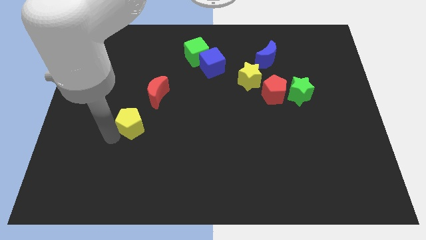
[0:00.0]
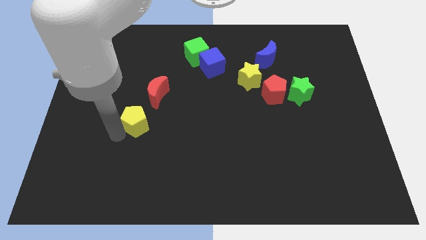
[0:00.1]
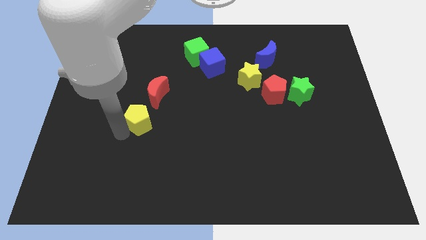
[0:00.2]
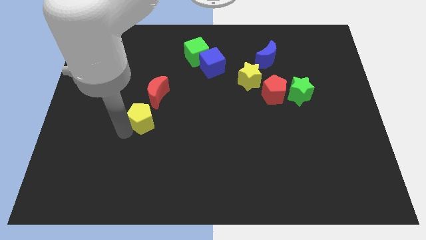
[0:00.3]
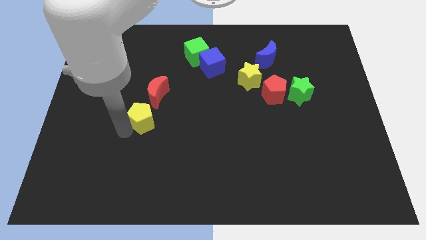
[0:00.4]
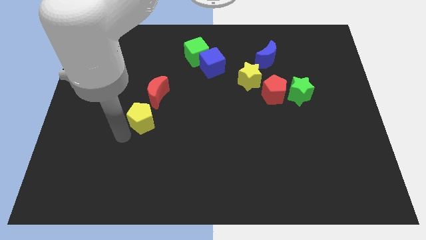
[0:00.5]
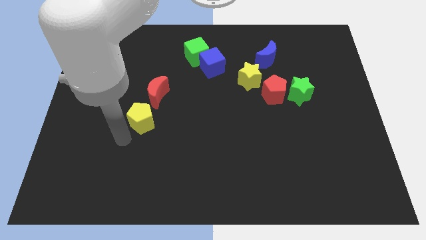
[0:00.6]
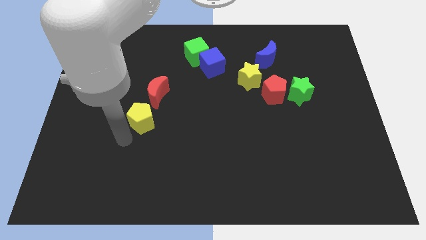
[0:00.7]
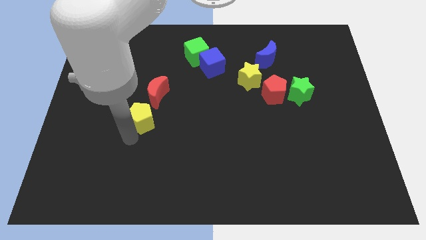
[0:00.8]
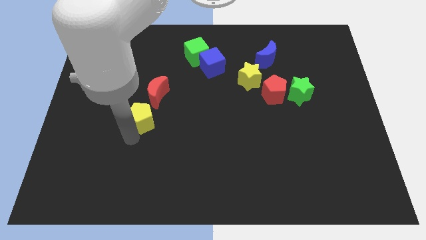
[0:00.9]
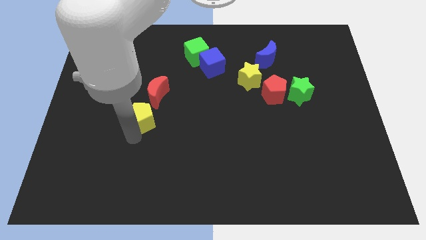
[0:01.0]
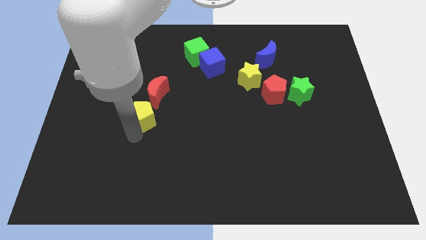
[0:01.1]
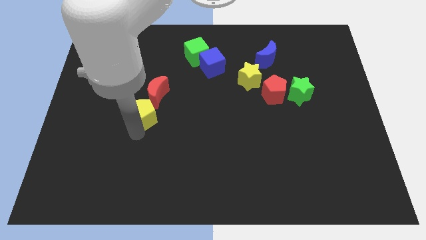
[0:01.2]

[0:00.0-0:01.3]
push the yellow pentagon towards the red crescent

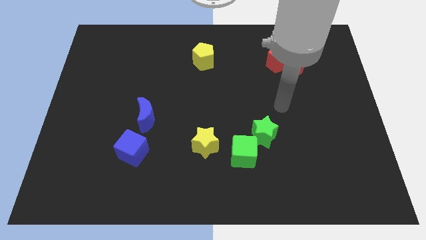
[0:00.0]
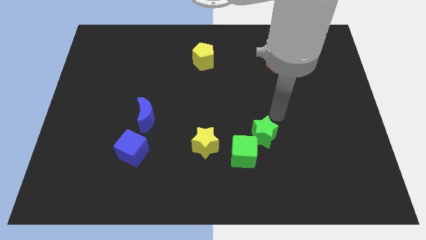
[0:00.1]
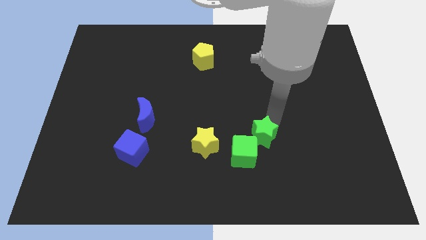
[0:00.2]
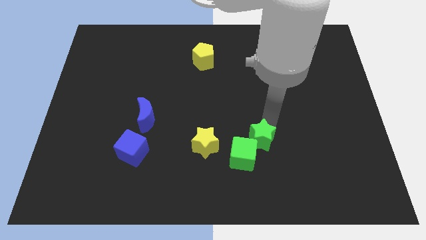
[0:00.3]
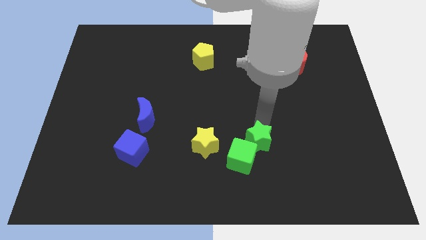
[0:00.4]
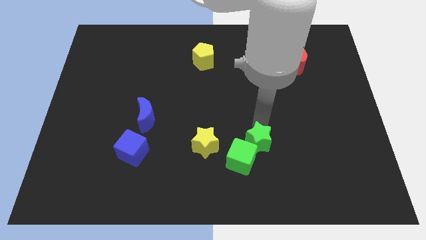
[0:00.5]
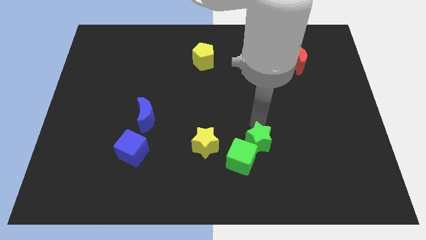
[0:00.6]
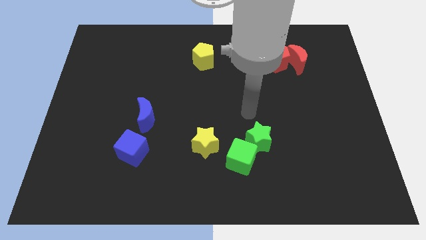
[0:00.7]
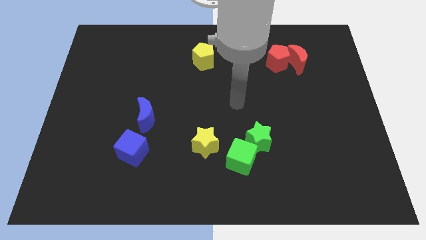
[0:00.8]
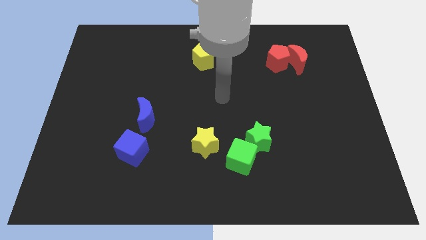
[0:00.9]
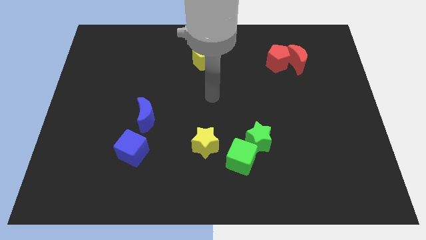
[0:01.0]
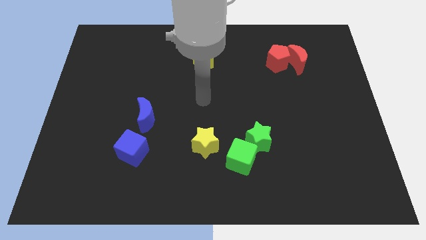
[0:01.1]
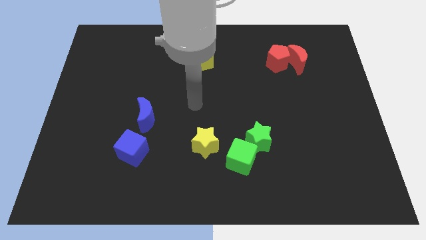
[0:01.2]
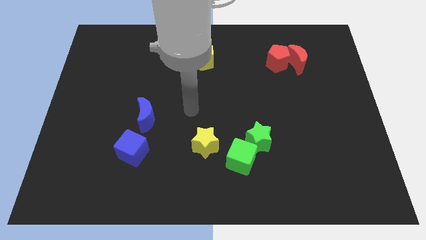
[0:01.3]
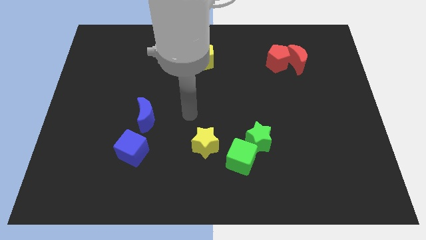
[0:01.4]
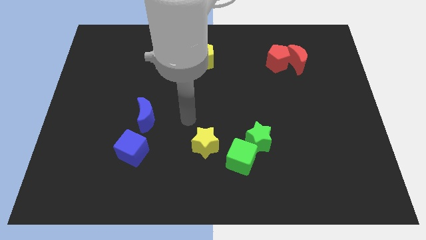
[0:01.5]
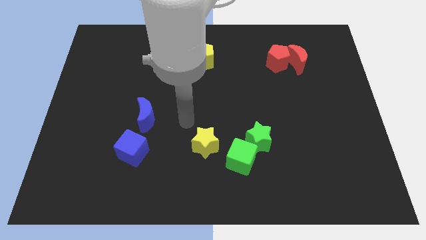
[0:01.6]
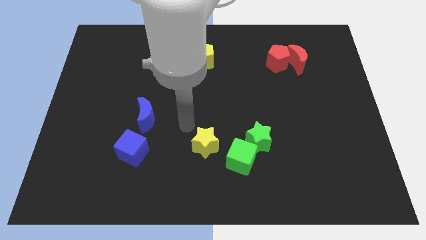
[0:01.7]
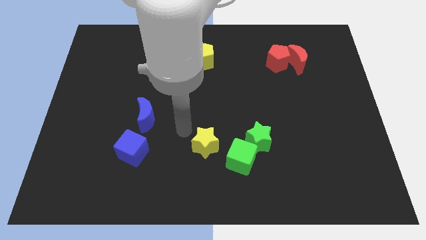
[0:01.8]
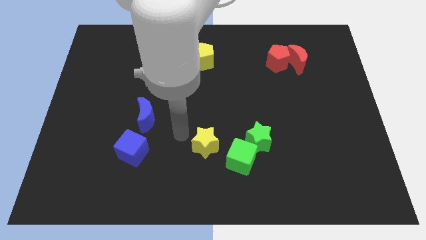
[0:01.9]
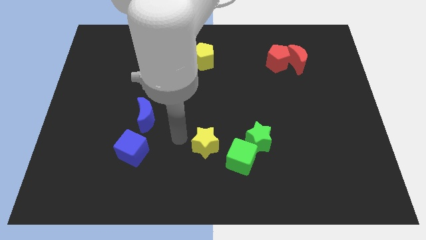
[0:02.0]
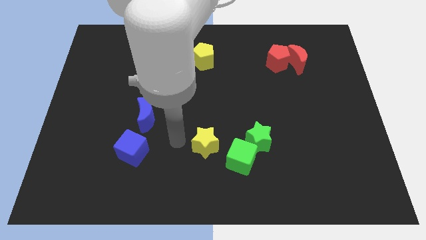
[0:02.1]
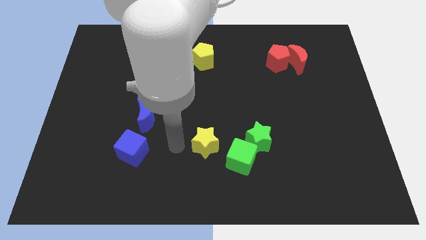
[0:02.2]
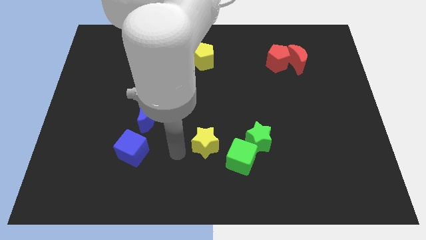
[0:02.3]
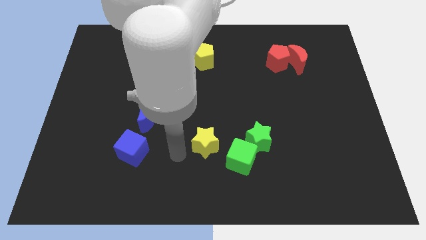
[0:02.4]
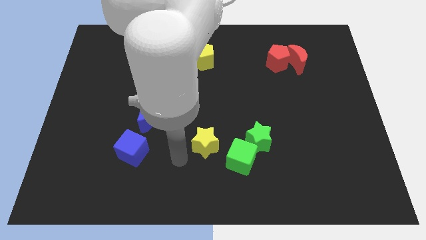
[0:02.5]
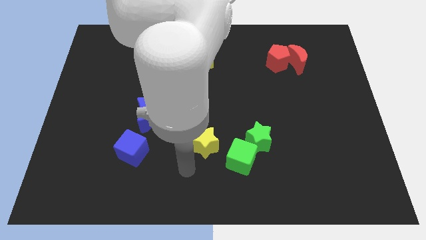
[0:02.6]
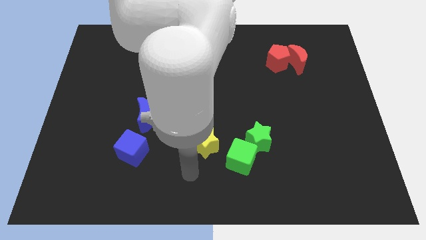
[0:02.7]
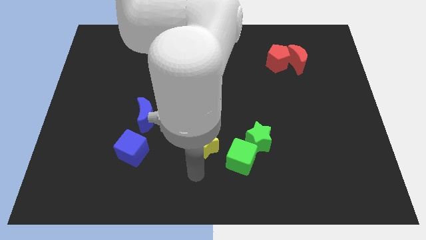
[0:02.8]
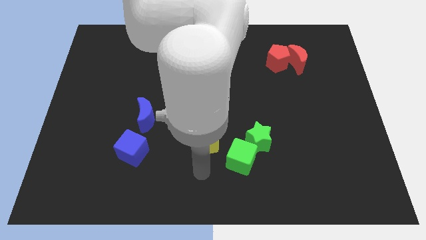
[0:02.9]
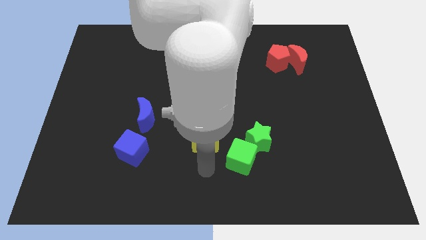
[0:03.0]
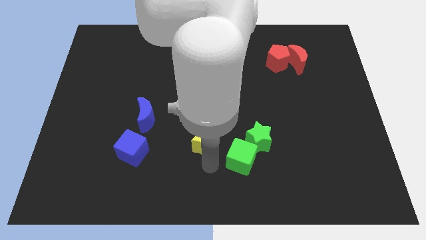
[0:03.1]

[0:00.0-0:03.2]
adjust the green star close to green cube

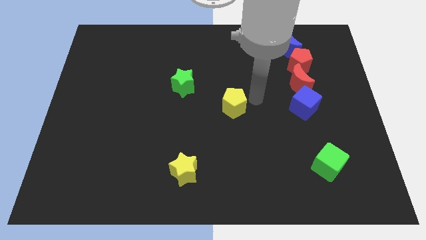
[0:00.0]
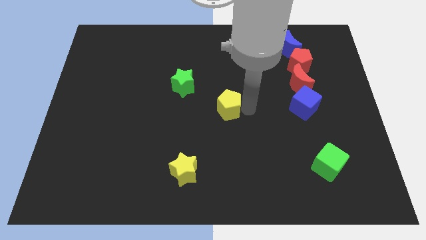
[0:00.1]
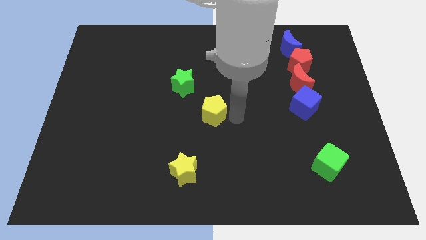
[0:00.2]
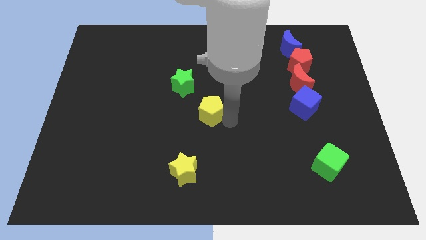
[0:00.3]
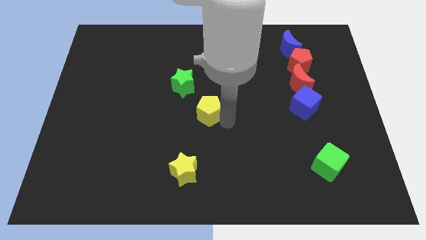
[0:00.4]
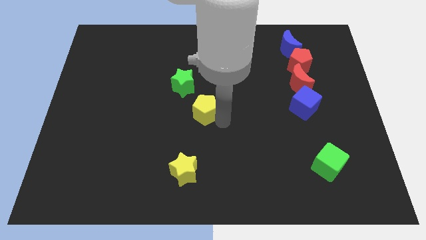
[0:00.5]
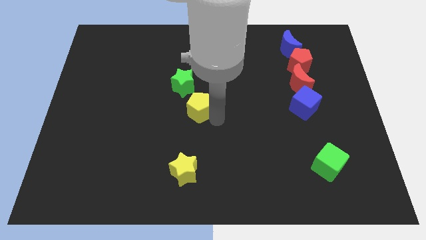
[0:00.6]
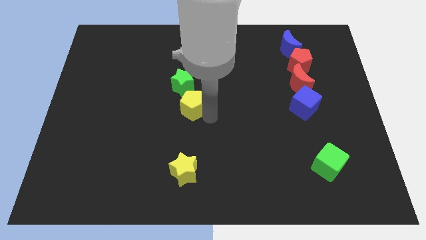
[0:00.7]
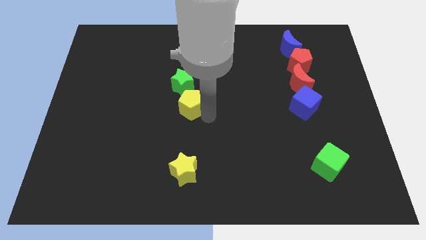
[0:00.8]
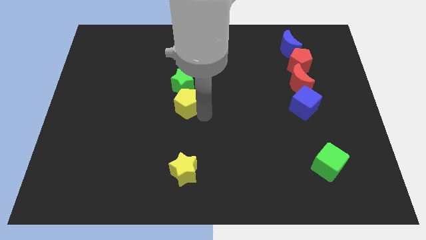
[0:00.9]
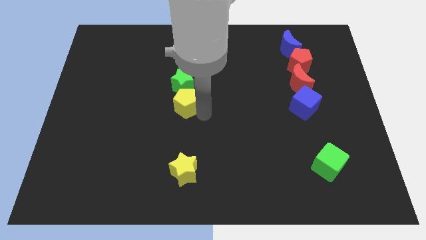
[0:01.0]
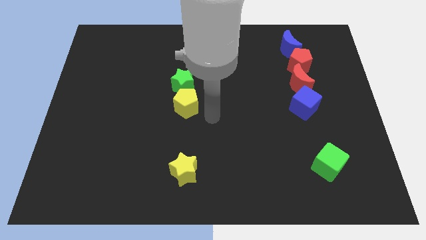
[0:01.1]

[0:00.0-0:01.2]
push the yellow pentagon to the bottom of green

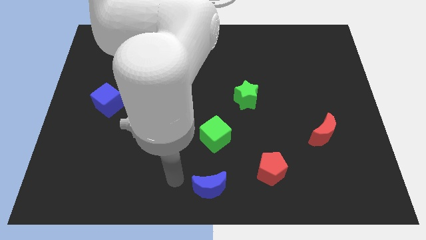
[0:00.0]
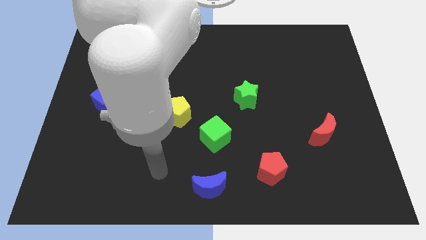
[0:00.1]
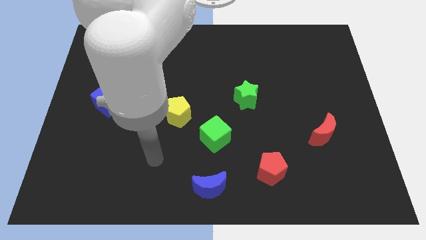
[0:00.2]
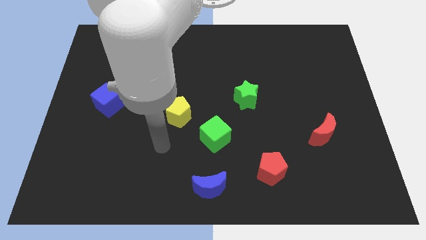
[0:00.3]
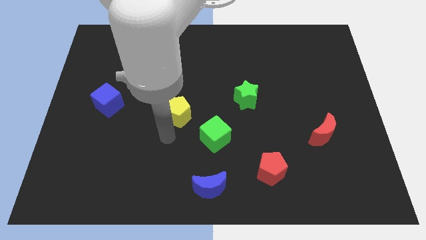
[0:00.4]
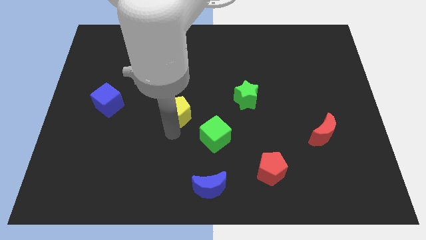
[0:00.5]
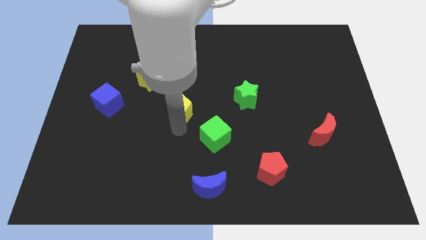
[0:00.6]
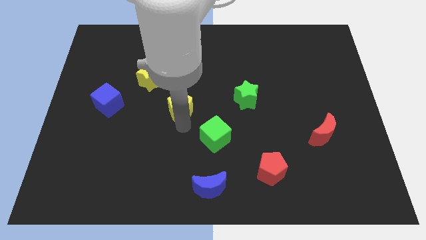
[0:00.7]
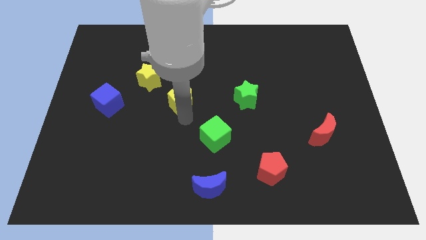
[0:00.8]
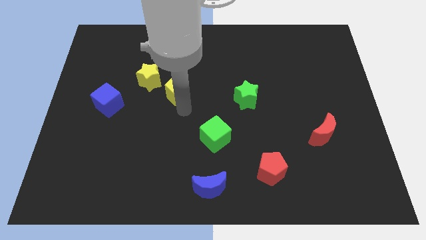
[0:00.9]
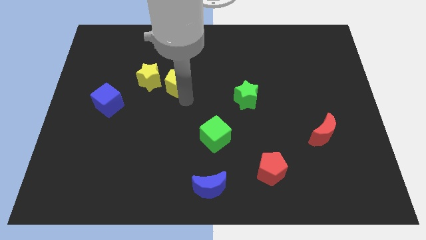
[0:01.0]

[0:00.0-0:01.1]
push yellow pentagon upwards

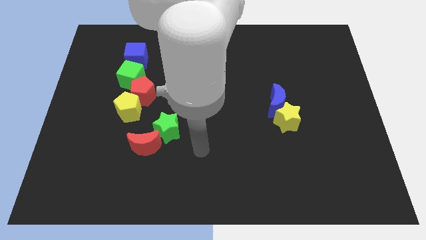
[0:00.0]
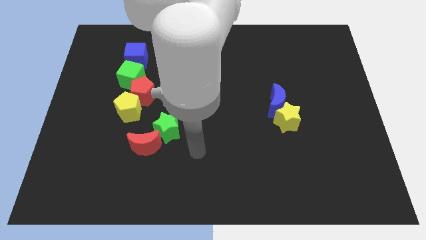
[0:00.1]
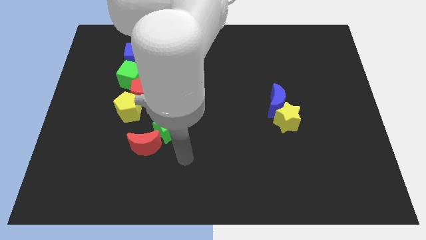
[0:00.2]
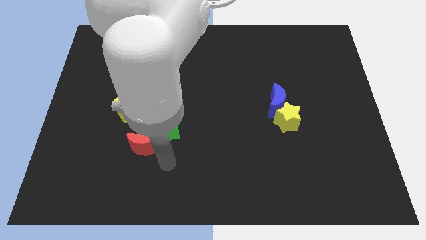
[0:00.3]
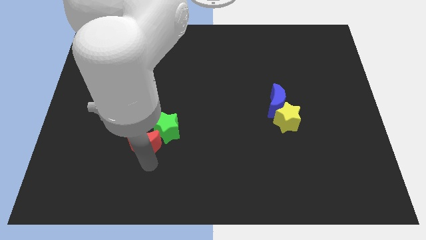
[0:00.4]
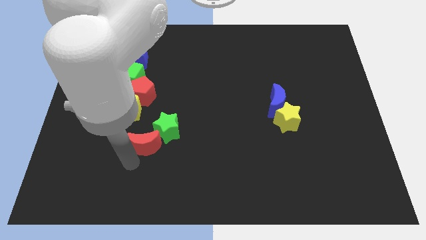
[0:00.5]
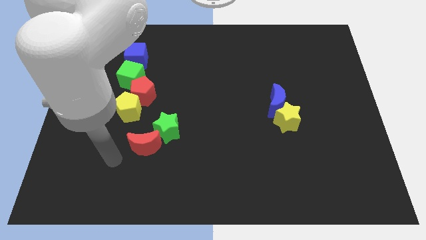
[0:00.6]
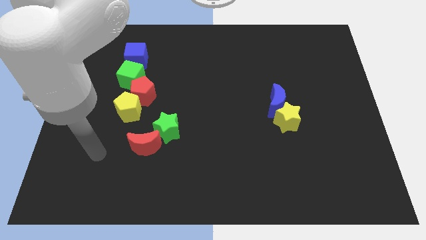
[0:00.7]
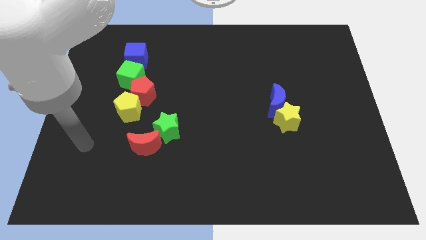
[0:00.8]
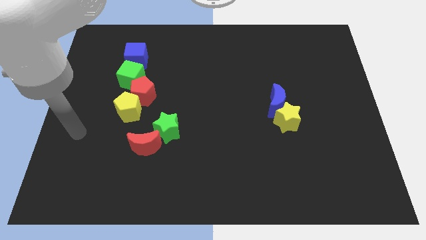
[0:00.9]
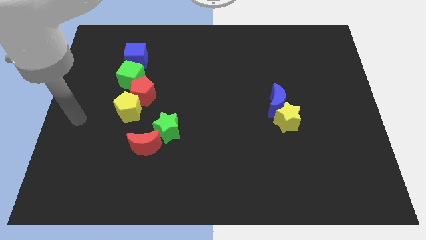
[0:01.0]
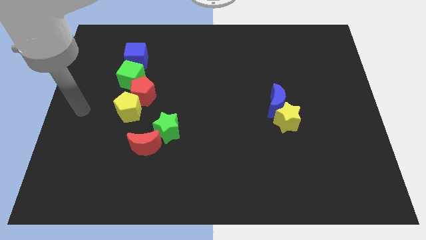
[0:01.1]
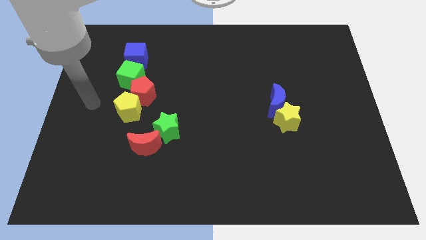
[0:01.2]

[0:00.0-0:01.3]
place your arm to the left center of the board

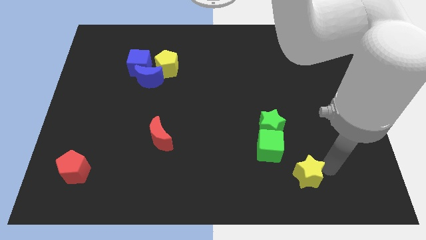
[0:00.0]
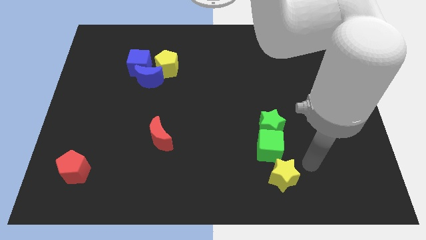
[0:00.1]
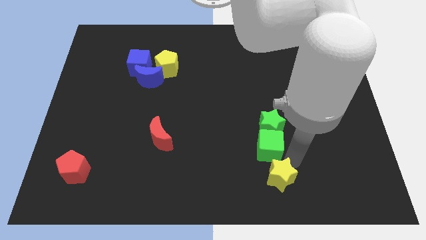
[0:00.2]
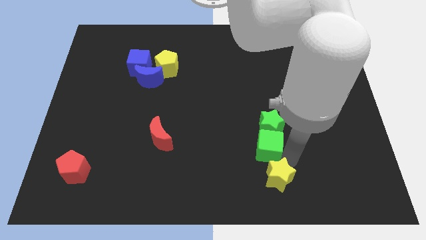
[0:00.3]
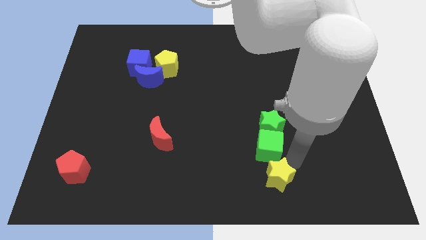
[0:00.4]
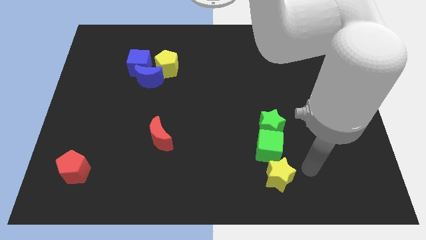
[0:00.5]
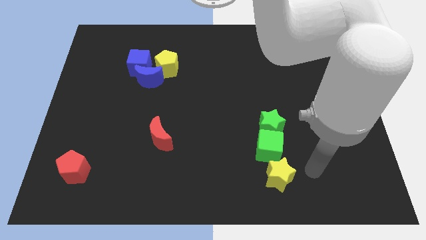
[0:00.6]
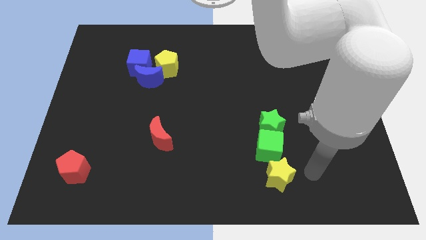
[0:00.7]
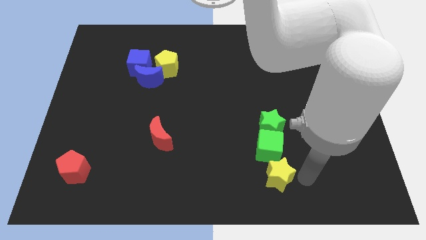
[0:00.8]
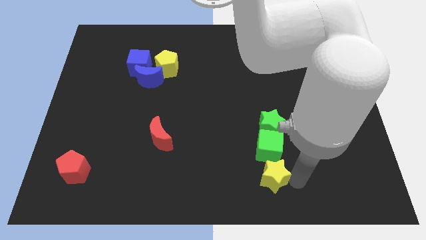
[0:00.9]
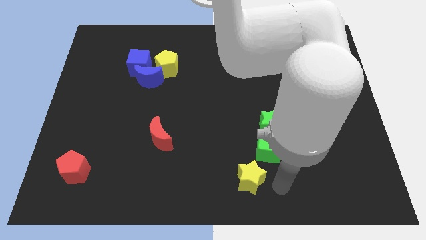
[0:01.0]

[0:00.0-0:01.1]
push the yellow star to the left
